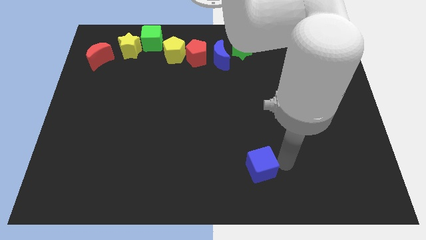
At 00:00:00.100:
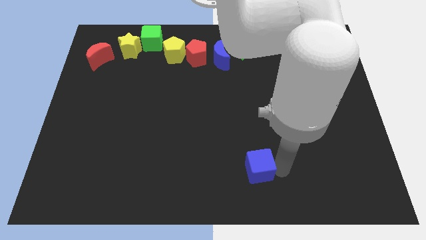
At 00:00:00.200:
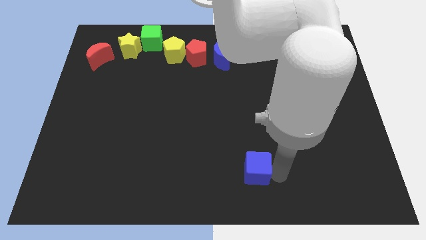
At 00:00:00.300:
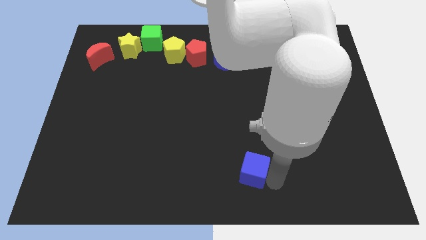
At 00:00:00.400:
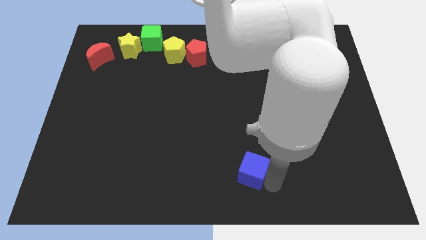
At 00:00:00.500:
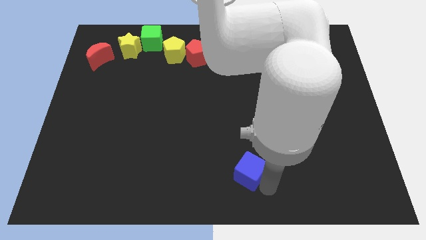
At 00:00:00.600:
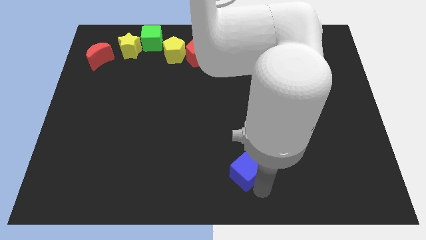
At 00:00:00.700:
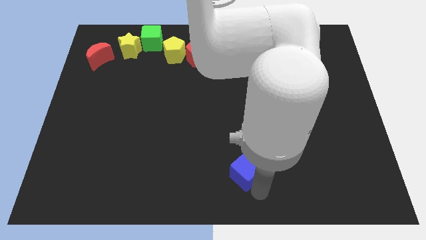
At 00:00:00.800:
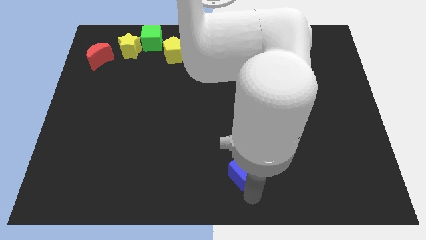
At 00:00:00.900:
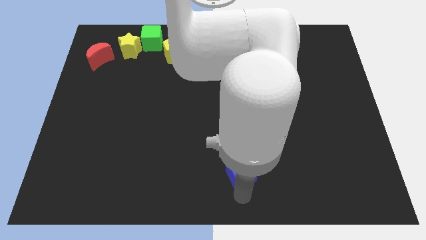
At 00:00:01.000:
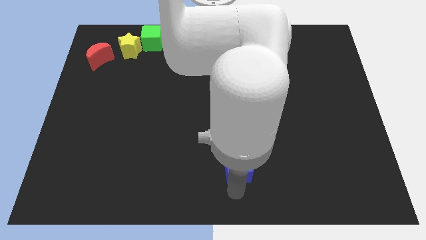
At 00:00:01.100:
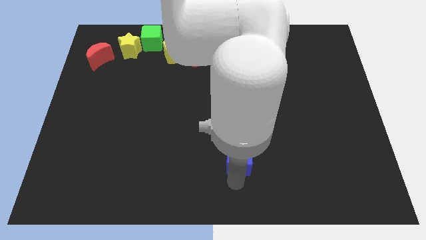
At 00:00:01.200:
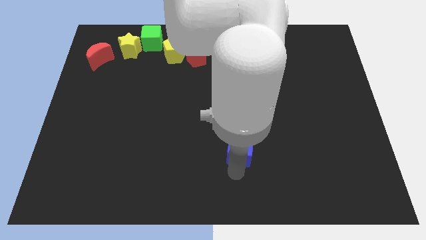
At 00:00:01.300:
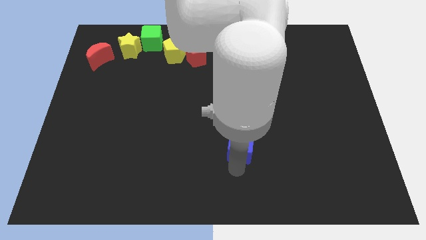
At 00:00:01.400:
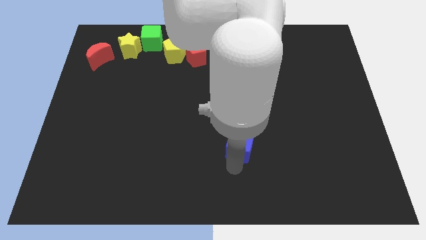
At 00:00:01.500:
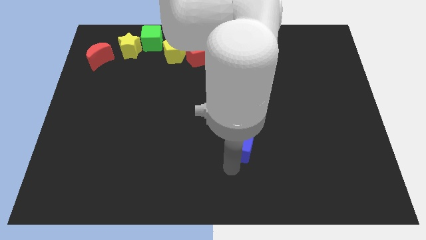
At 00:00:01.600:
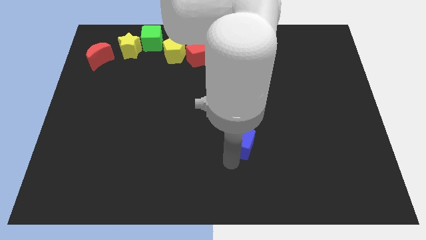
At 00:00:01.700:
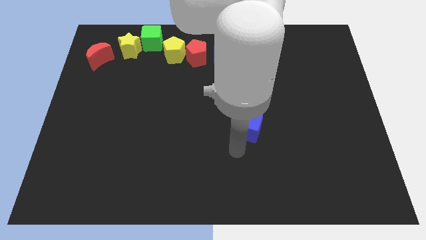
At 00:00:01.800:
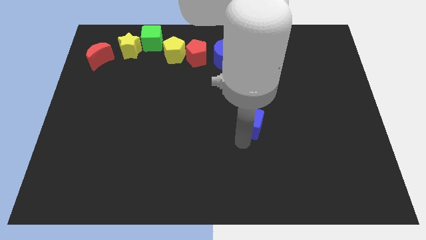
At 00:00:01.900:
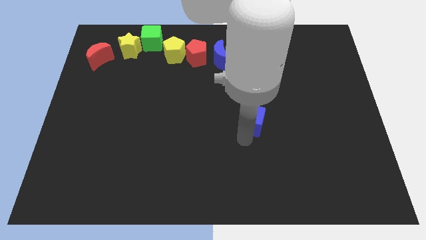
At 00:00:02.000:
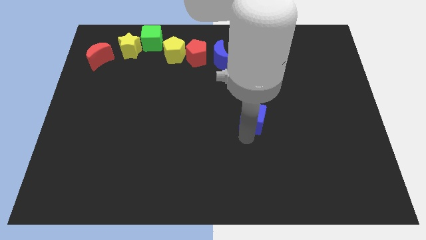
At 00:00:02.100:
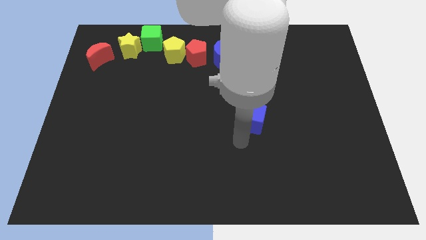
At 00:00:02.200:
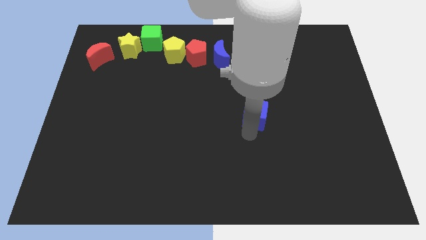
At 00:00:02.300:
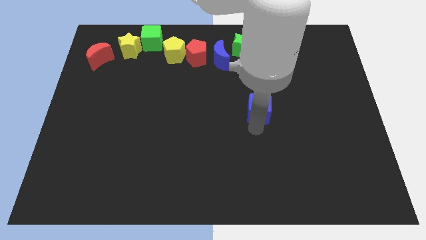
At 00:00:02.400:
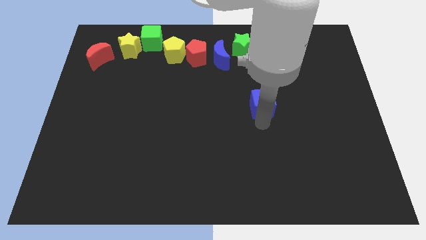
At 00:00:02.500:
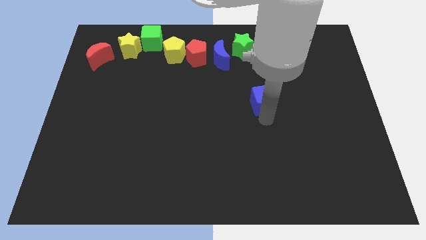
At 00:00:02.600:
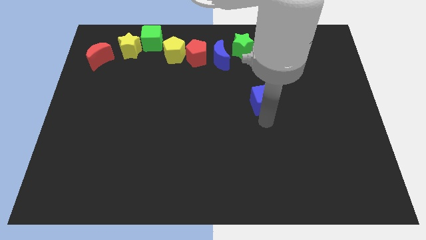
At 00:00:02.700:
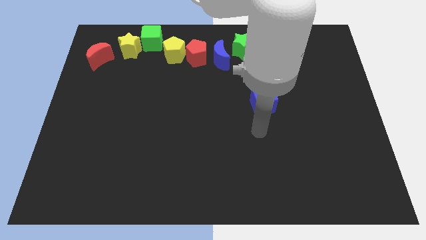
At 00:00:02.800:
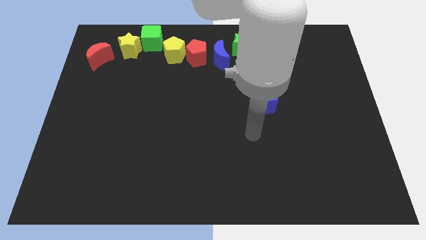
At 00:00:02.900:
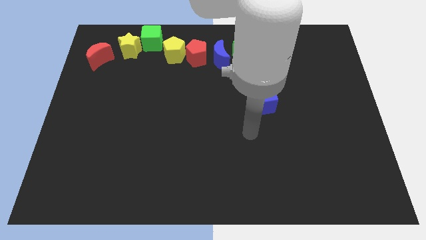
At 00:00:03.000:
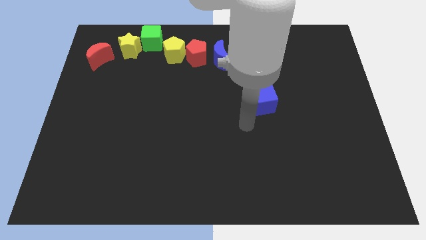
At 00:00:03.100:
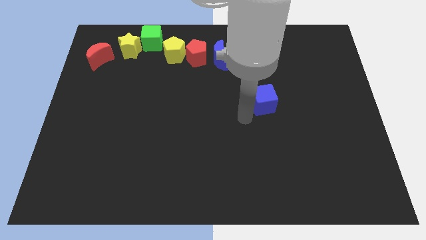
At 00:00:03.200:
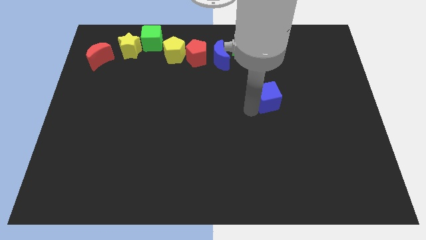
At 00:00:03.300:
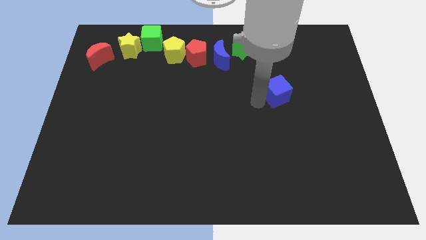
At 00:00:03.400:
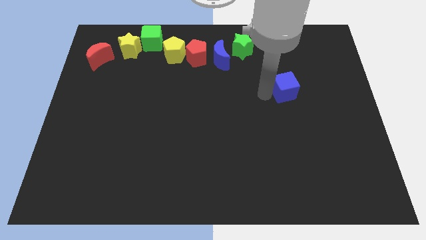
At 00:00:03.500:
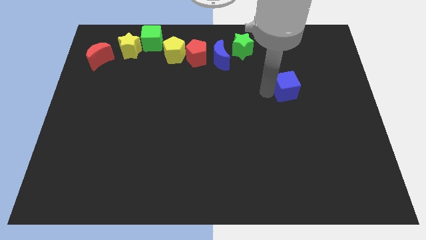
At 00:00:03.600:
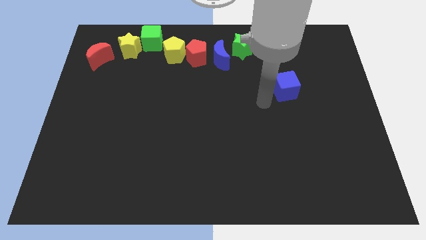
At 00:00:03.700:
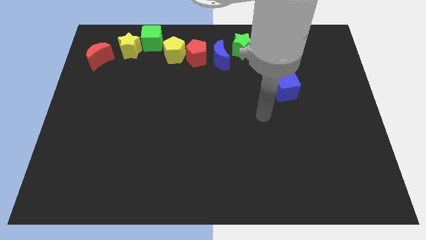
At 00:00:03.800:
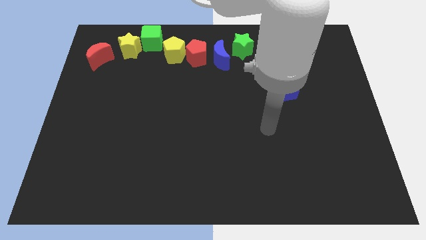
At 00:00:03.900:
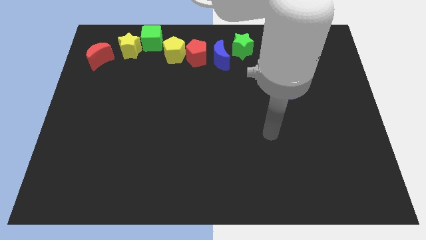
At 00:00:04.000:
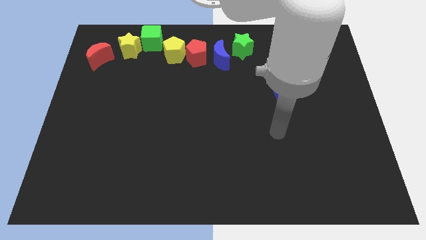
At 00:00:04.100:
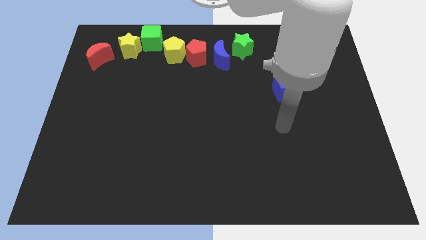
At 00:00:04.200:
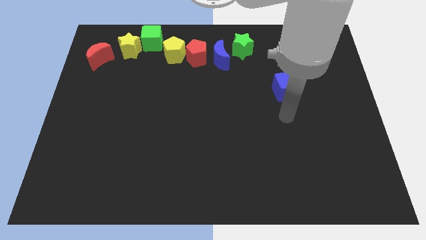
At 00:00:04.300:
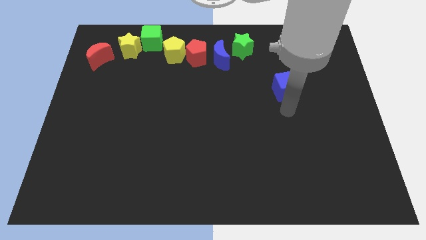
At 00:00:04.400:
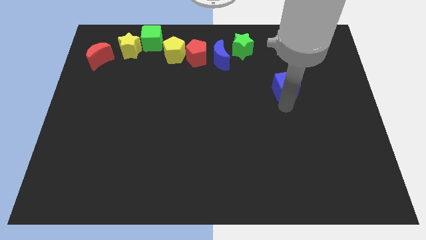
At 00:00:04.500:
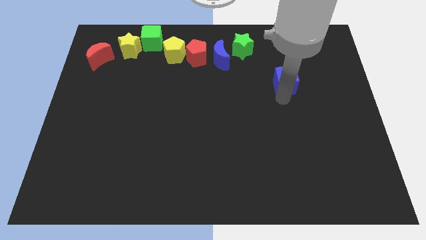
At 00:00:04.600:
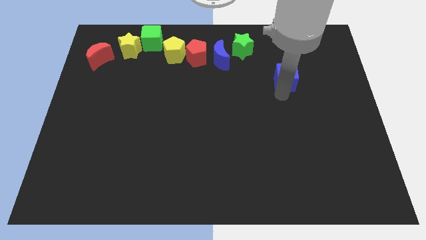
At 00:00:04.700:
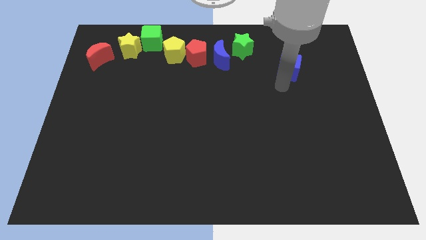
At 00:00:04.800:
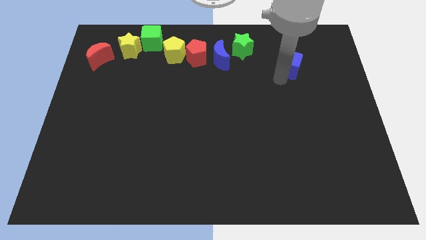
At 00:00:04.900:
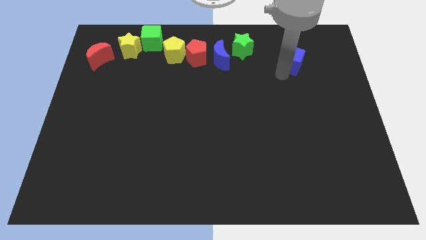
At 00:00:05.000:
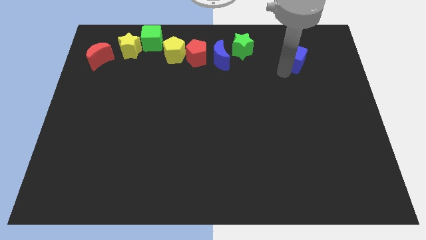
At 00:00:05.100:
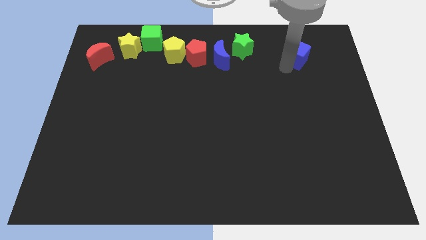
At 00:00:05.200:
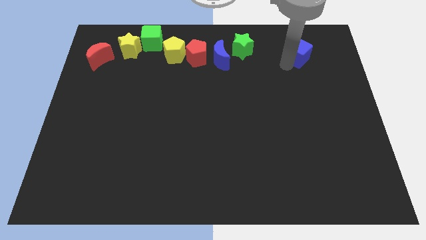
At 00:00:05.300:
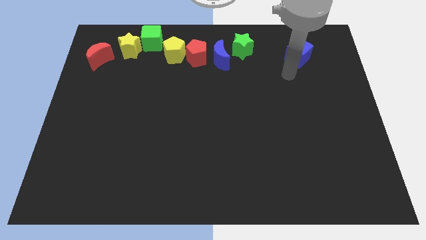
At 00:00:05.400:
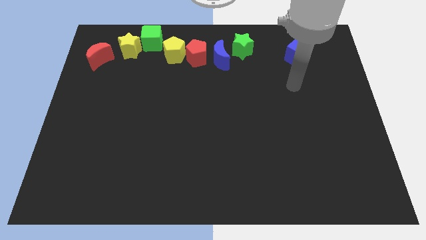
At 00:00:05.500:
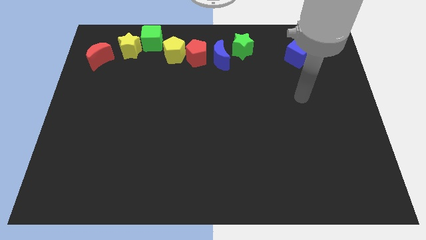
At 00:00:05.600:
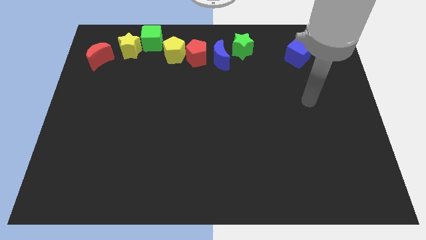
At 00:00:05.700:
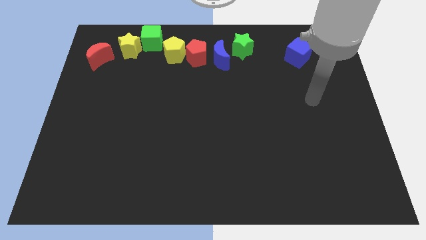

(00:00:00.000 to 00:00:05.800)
move the blue cube right to the green star

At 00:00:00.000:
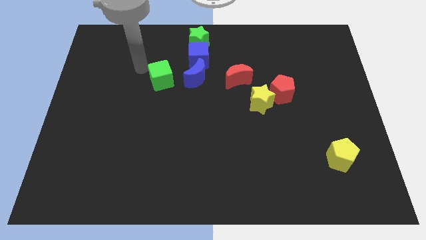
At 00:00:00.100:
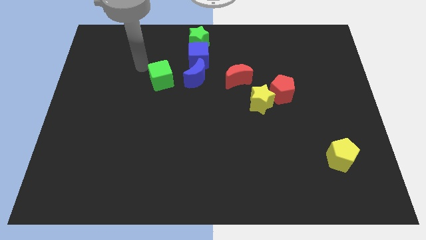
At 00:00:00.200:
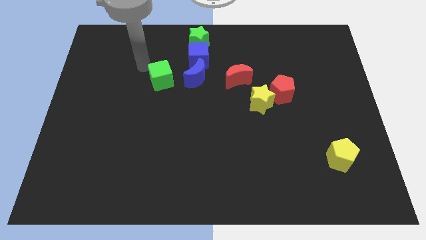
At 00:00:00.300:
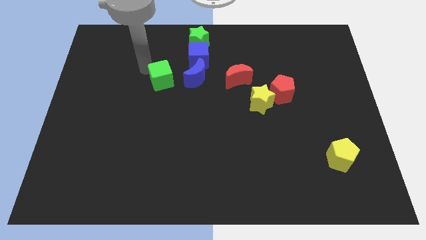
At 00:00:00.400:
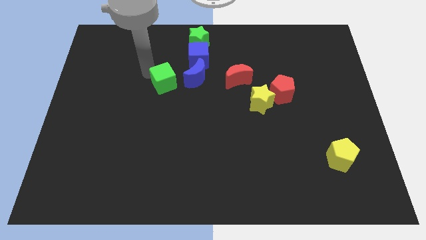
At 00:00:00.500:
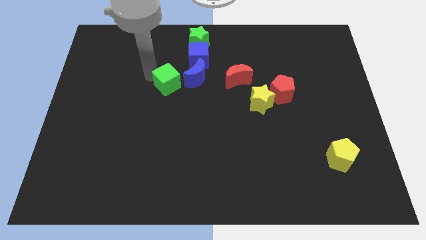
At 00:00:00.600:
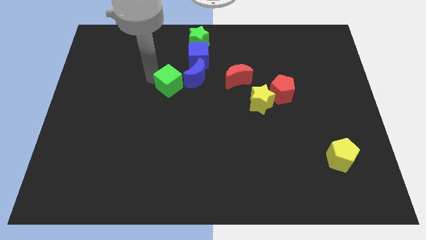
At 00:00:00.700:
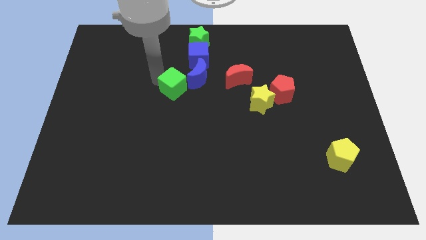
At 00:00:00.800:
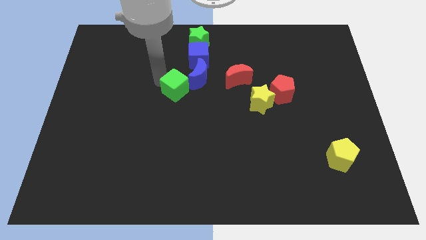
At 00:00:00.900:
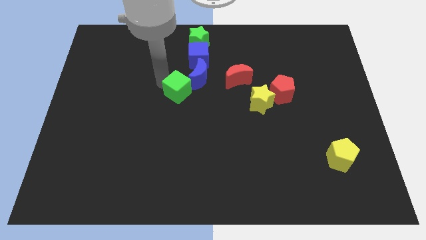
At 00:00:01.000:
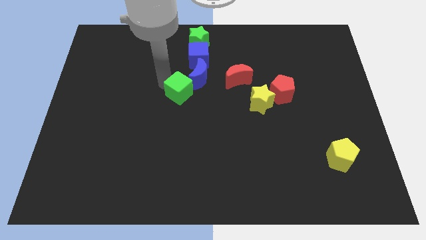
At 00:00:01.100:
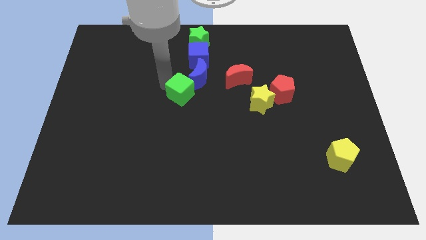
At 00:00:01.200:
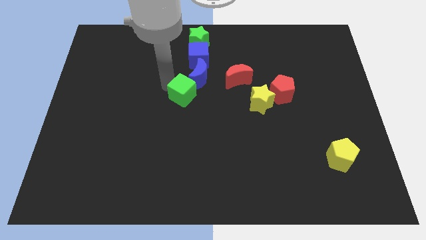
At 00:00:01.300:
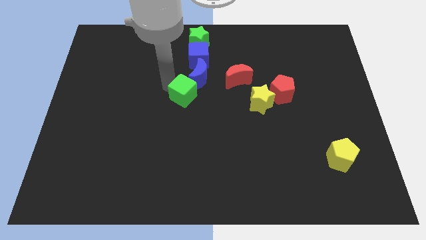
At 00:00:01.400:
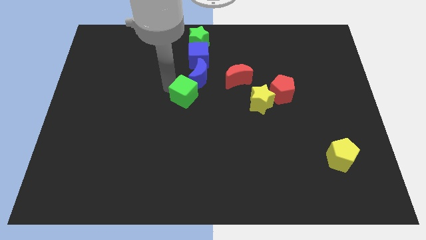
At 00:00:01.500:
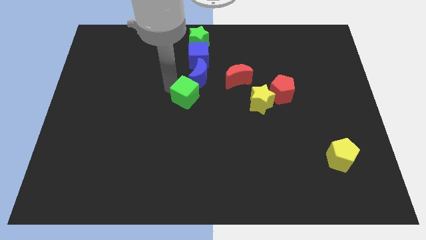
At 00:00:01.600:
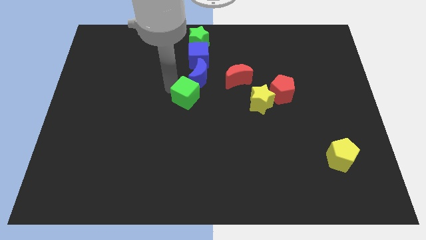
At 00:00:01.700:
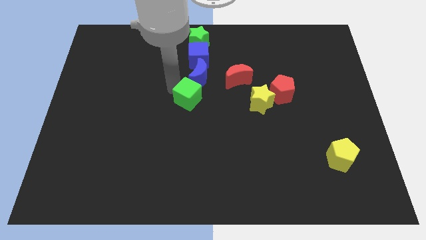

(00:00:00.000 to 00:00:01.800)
move the green cube to the center side

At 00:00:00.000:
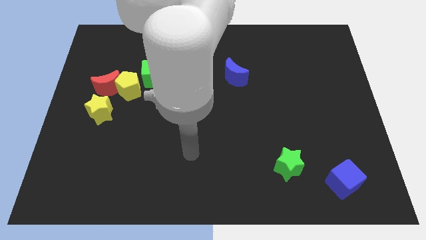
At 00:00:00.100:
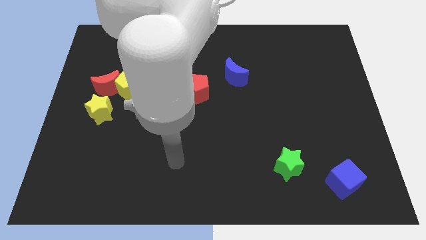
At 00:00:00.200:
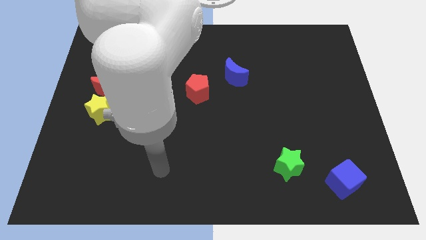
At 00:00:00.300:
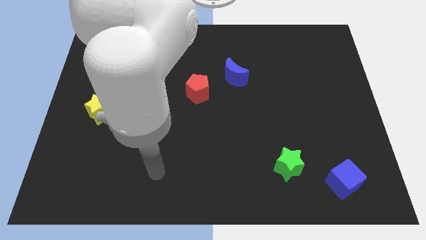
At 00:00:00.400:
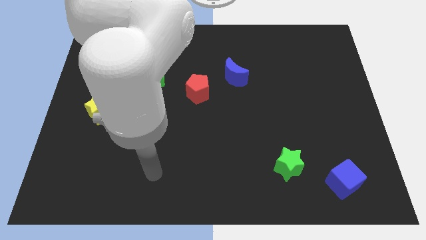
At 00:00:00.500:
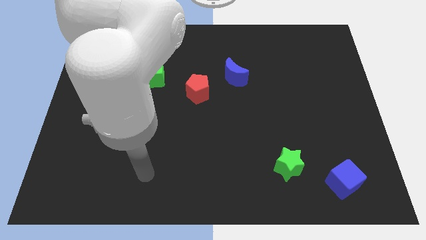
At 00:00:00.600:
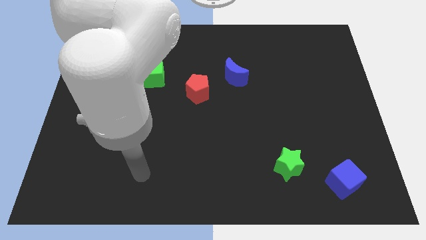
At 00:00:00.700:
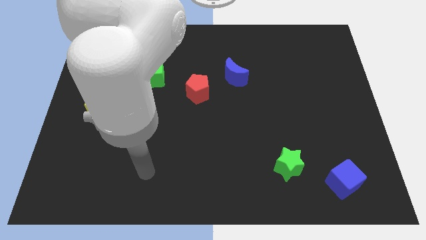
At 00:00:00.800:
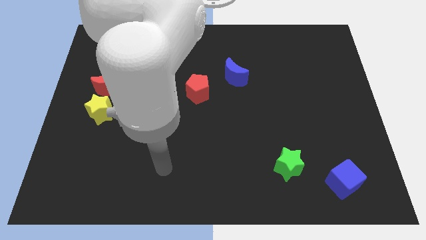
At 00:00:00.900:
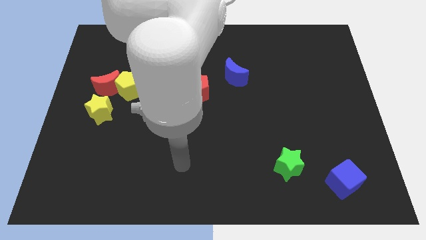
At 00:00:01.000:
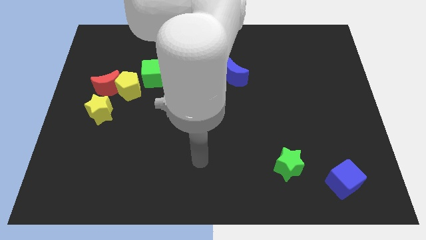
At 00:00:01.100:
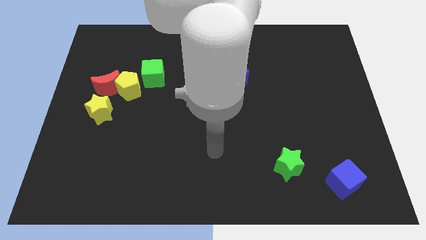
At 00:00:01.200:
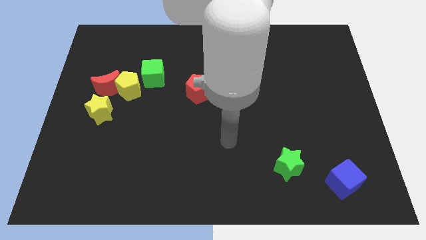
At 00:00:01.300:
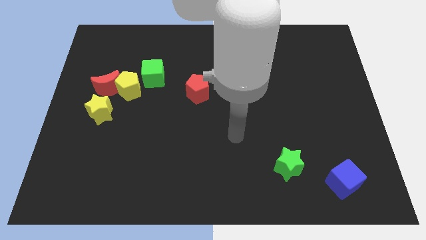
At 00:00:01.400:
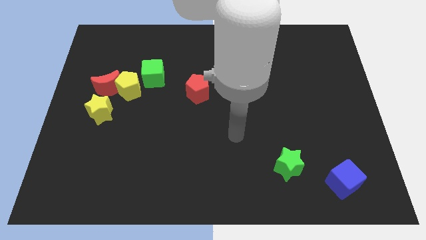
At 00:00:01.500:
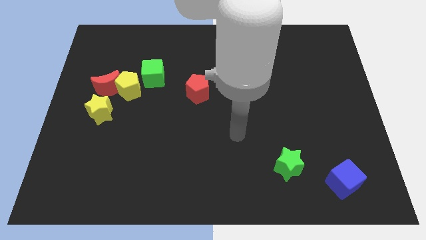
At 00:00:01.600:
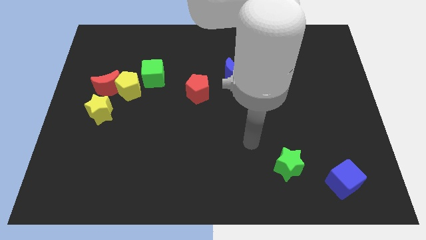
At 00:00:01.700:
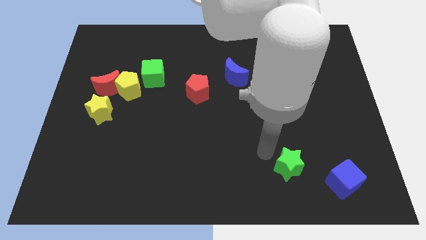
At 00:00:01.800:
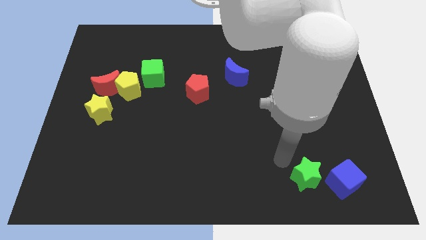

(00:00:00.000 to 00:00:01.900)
place your arm diagonal to the green star
